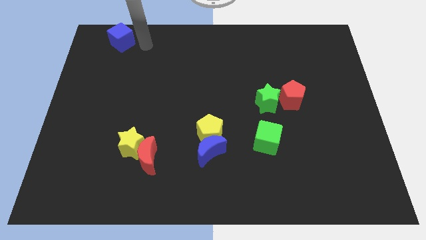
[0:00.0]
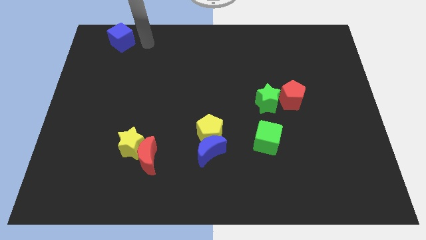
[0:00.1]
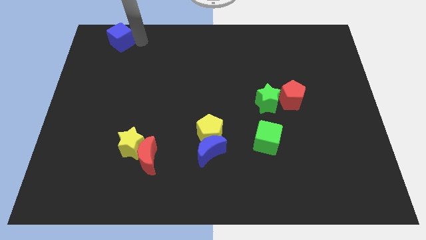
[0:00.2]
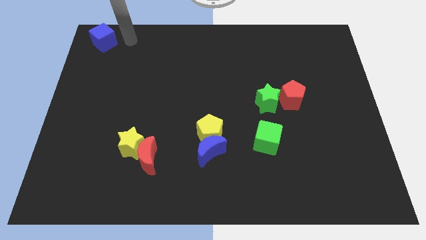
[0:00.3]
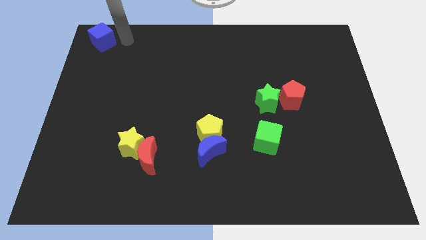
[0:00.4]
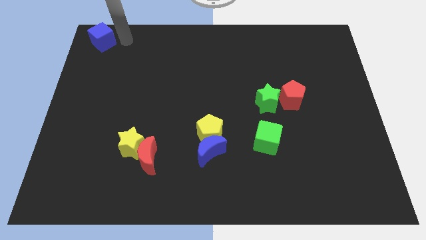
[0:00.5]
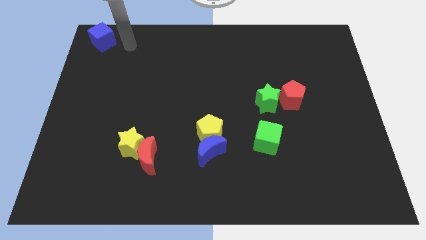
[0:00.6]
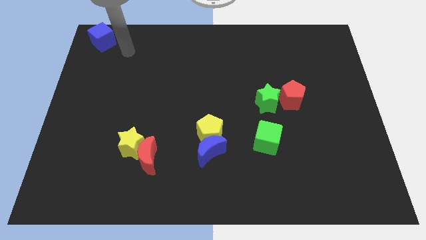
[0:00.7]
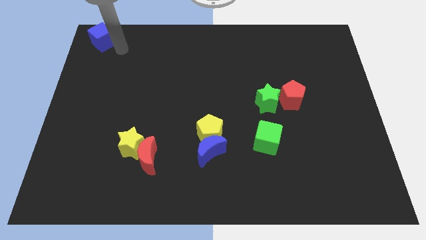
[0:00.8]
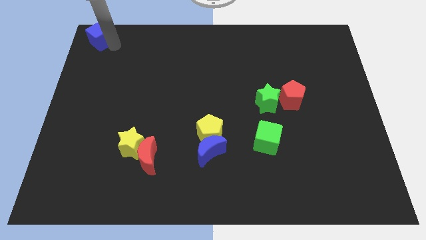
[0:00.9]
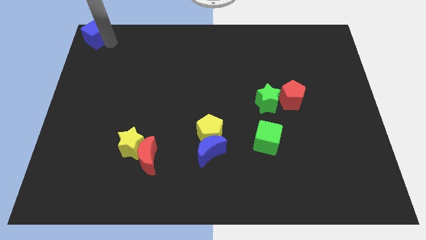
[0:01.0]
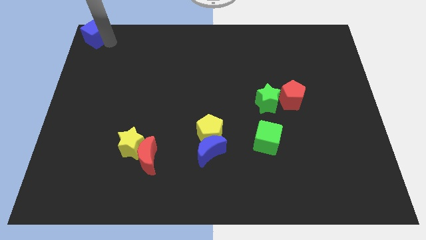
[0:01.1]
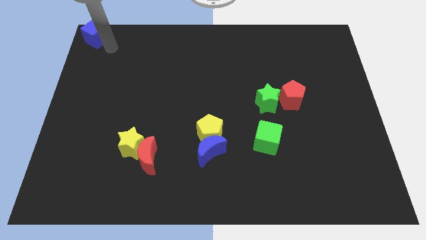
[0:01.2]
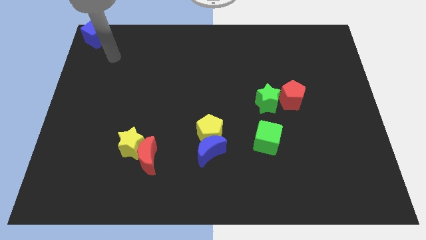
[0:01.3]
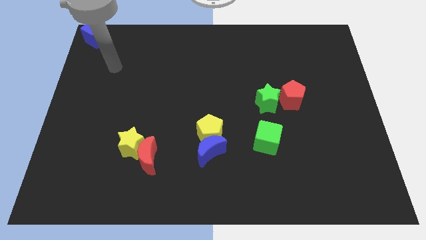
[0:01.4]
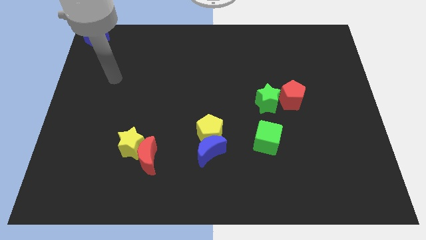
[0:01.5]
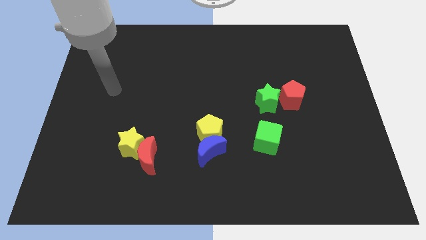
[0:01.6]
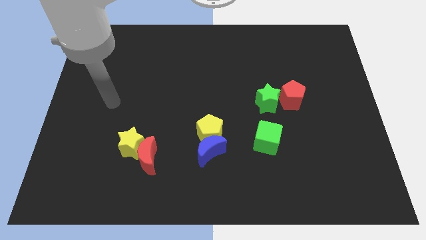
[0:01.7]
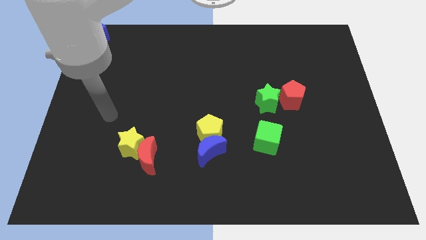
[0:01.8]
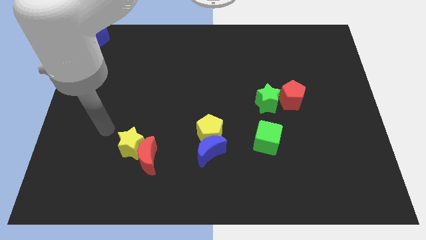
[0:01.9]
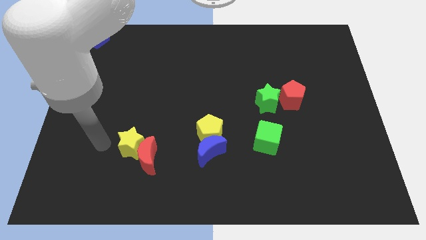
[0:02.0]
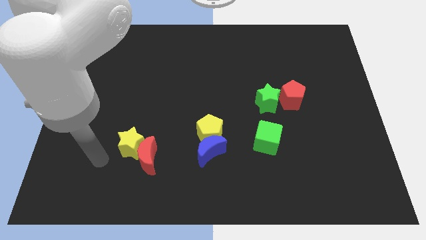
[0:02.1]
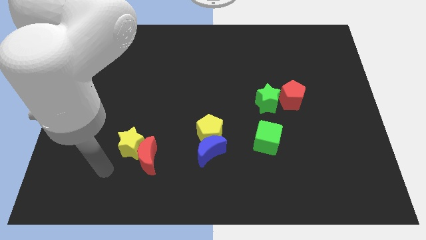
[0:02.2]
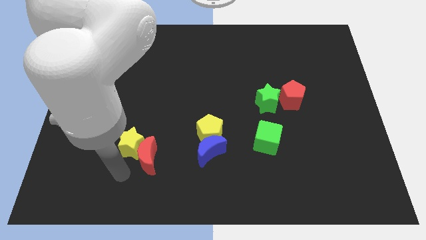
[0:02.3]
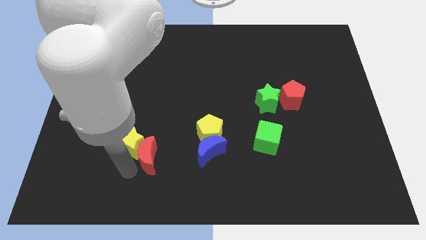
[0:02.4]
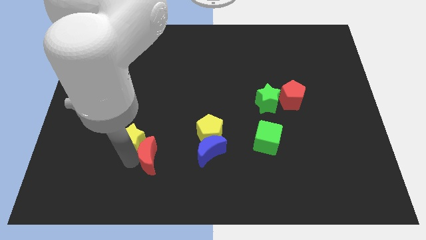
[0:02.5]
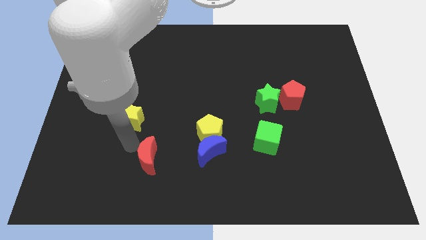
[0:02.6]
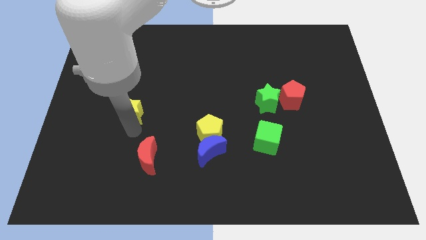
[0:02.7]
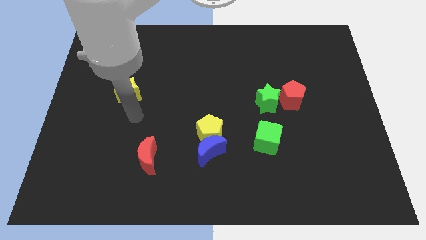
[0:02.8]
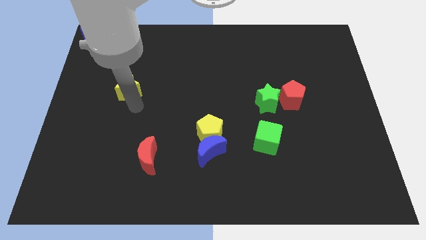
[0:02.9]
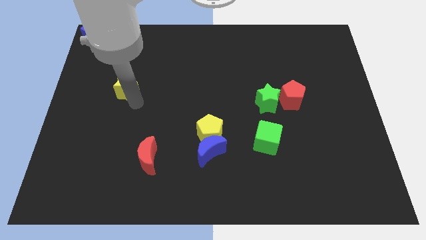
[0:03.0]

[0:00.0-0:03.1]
move yellow star towards the blue cube

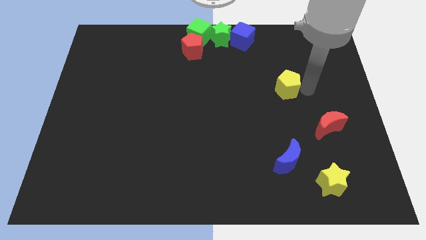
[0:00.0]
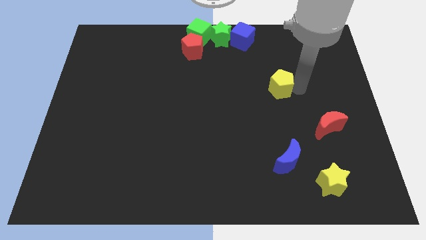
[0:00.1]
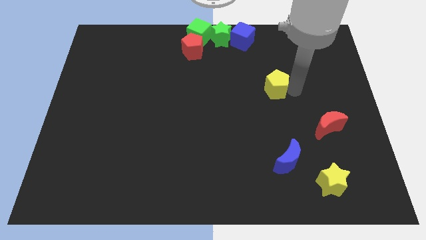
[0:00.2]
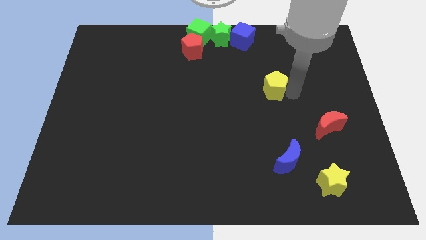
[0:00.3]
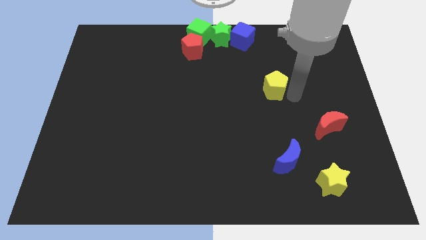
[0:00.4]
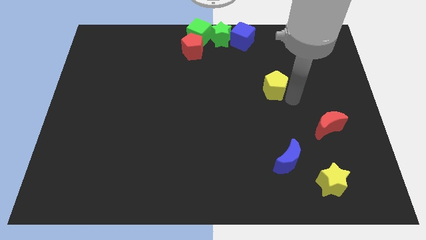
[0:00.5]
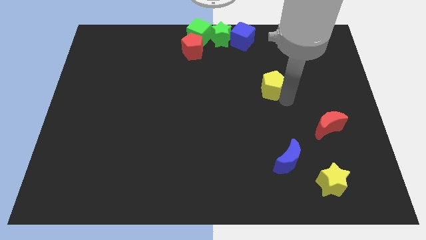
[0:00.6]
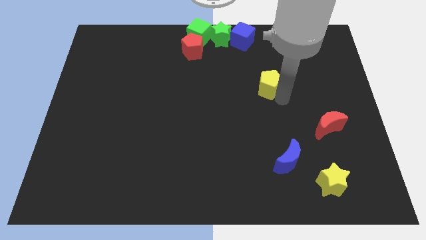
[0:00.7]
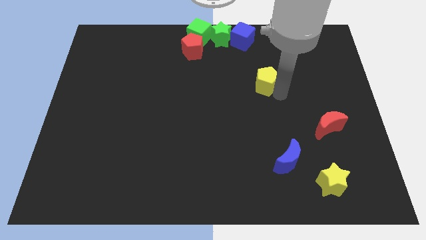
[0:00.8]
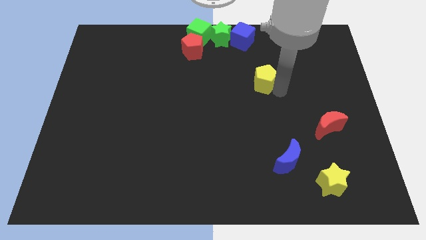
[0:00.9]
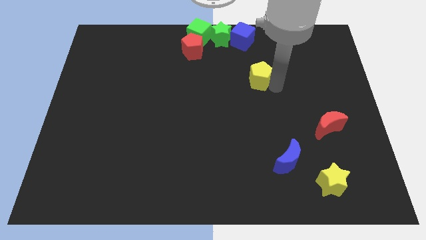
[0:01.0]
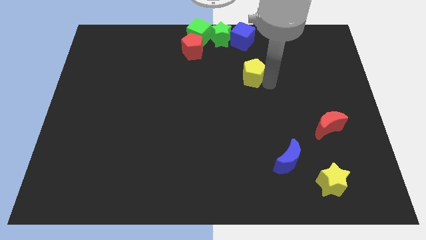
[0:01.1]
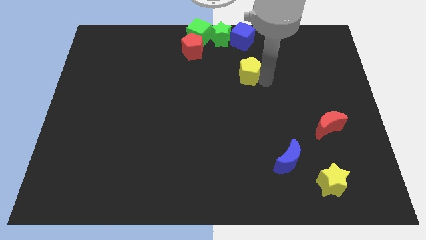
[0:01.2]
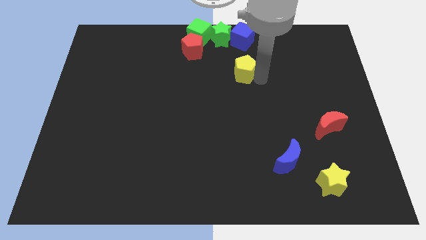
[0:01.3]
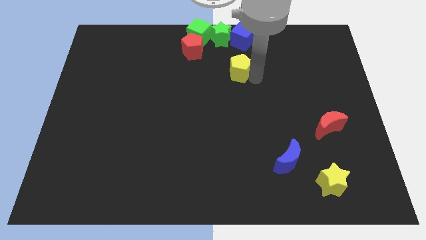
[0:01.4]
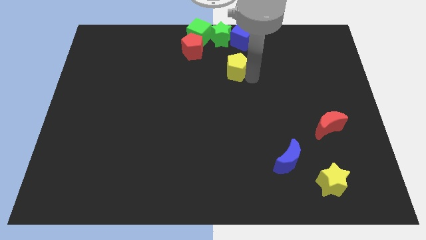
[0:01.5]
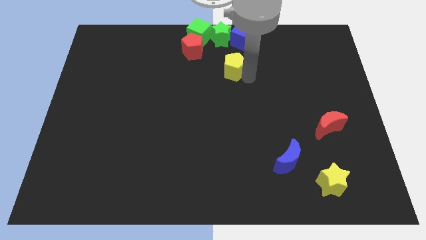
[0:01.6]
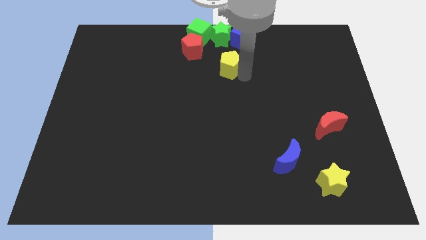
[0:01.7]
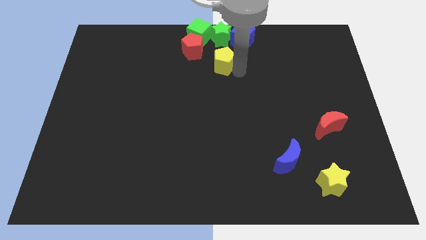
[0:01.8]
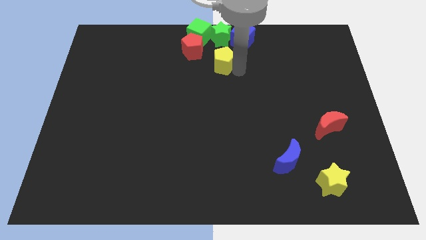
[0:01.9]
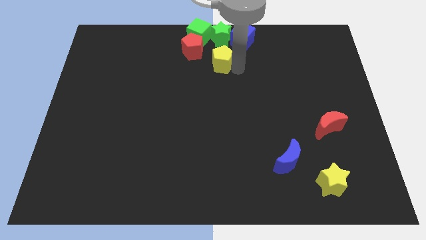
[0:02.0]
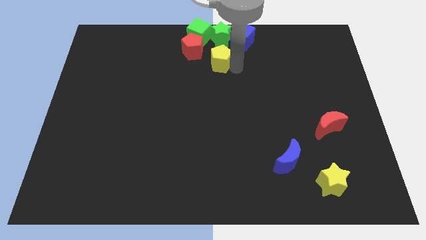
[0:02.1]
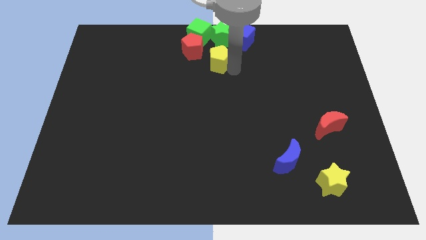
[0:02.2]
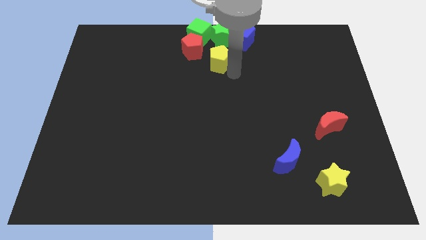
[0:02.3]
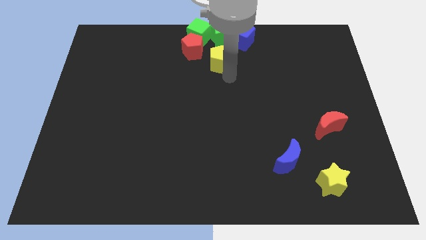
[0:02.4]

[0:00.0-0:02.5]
push the yellow pentagon below the green star

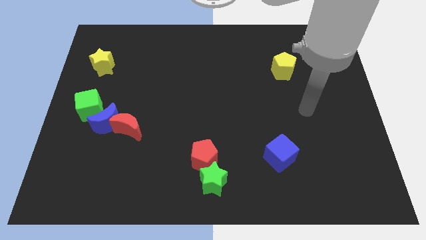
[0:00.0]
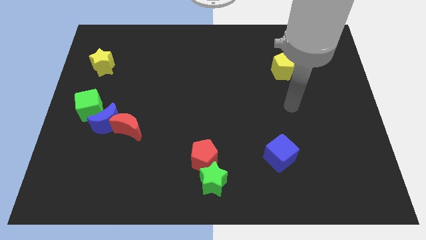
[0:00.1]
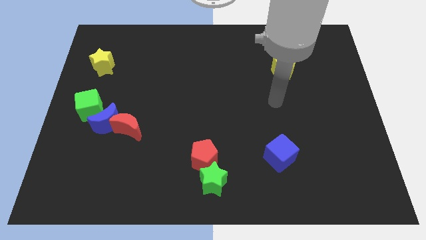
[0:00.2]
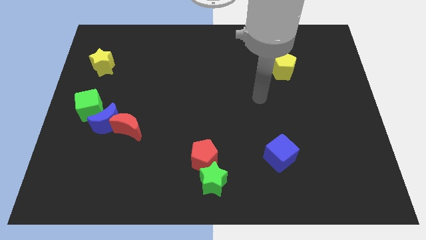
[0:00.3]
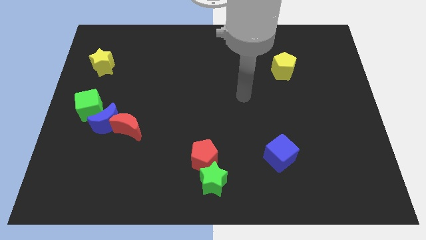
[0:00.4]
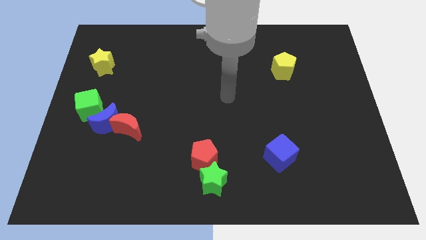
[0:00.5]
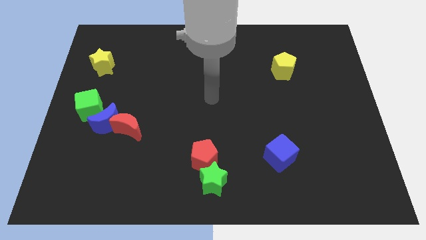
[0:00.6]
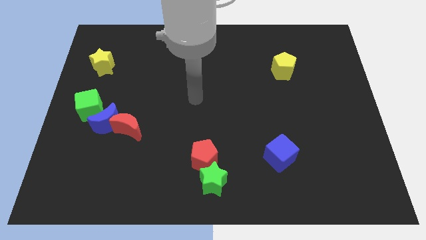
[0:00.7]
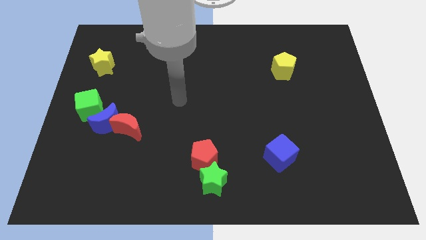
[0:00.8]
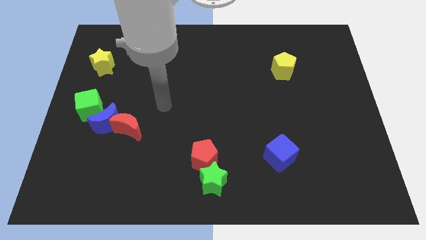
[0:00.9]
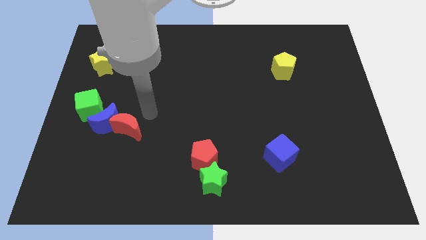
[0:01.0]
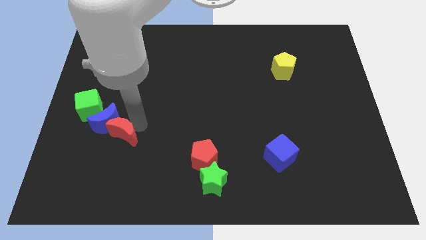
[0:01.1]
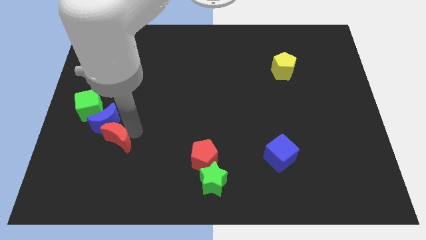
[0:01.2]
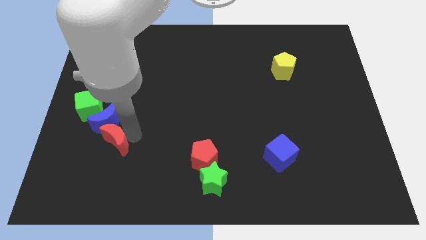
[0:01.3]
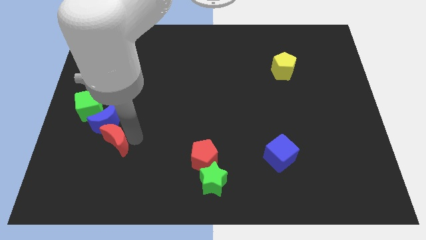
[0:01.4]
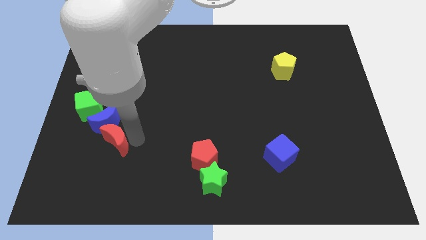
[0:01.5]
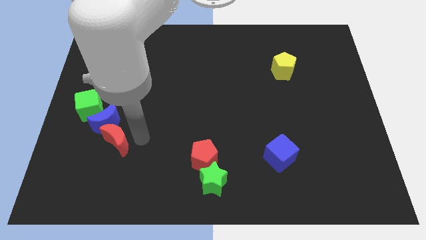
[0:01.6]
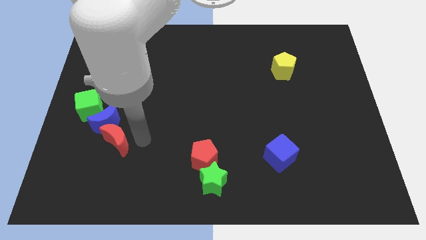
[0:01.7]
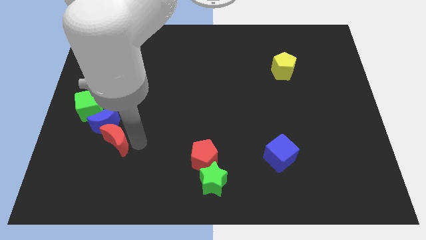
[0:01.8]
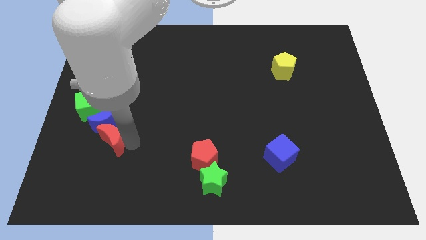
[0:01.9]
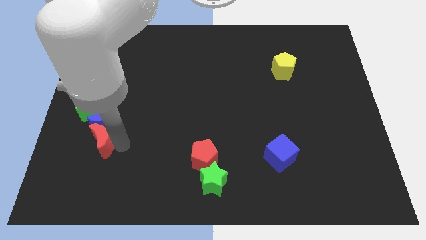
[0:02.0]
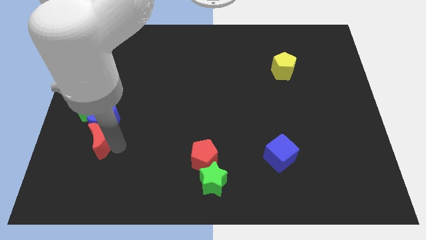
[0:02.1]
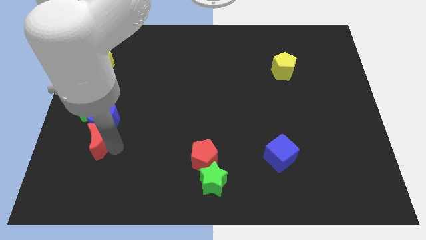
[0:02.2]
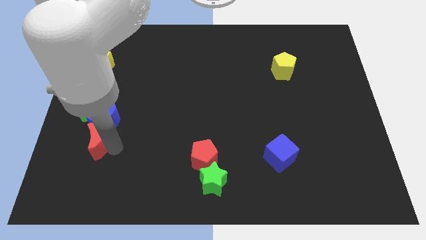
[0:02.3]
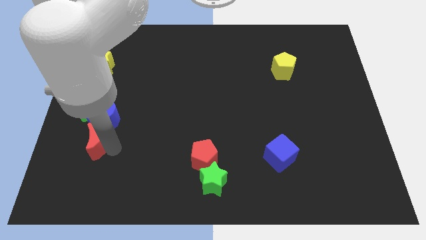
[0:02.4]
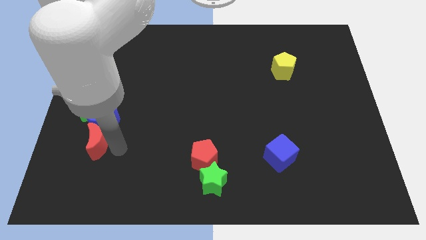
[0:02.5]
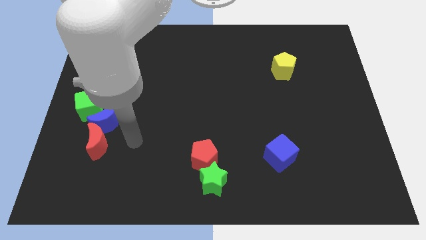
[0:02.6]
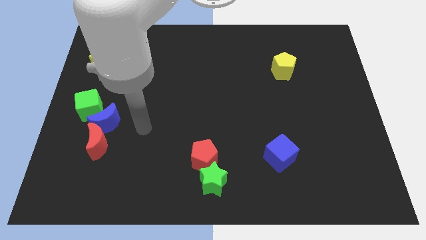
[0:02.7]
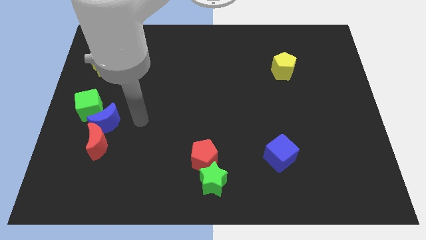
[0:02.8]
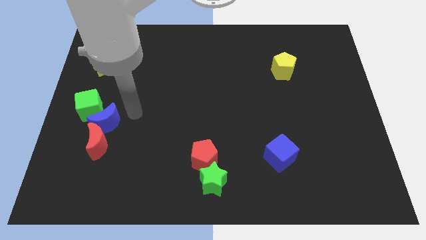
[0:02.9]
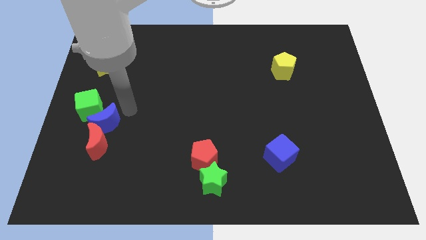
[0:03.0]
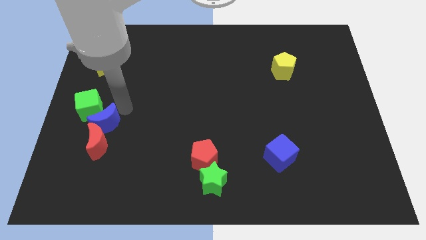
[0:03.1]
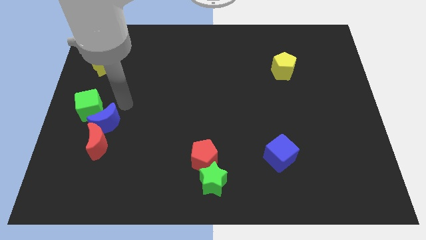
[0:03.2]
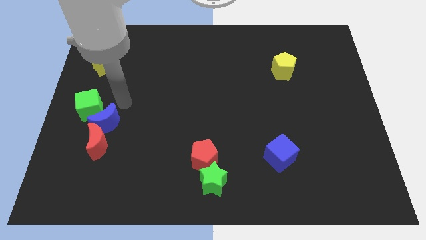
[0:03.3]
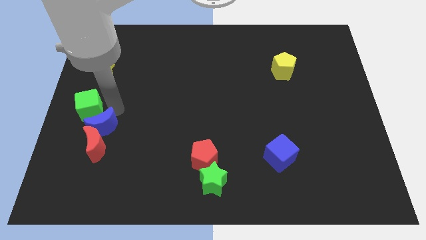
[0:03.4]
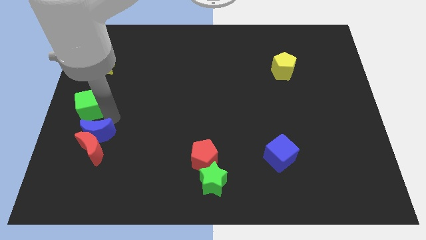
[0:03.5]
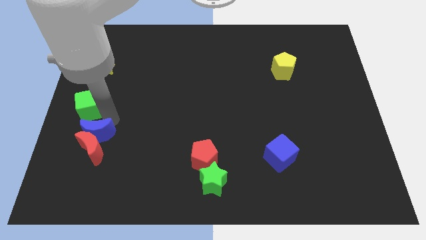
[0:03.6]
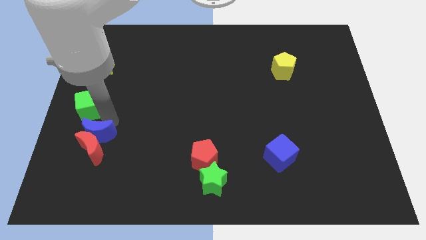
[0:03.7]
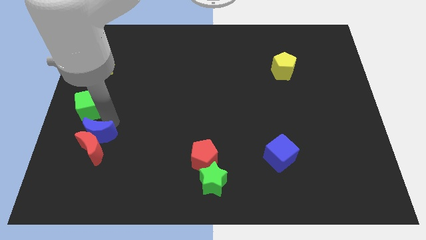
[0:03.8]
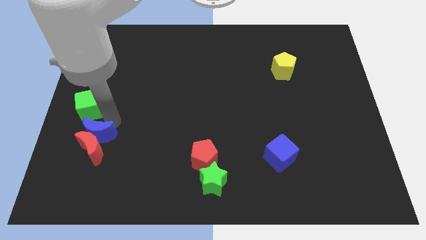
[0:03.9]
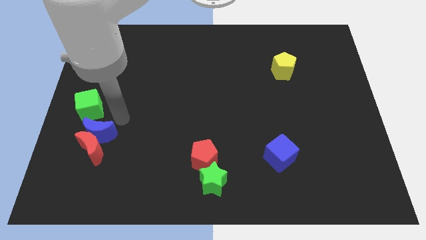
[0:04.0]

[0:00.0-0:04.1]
slightly push the blue crescent towards the red crescent
